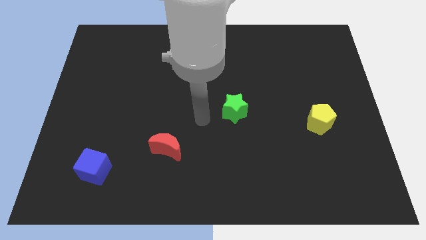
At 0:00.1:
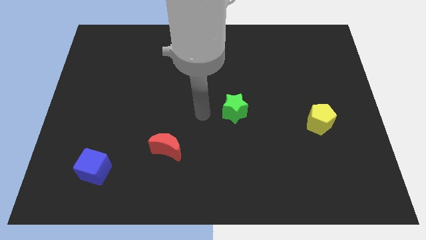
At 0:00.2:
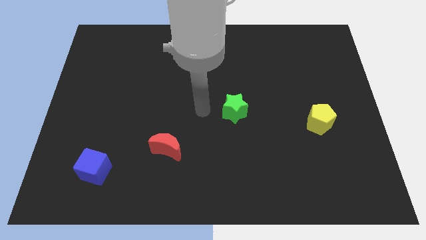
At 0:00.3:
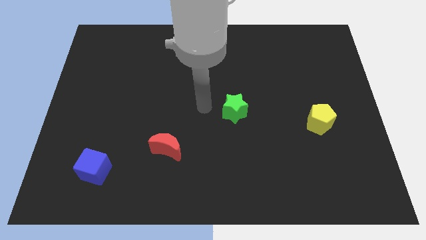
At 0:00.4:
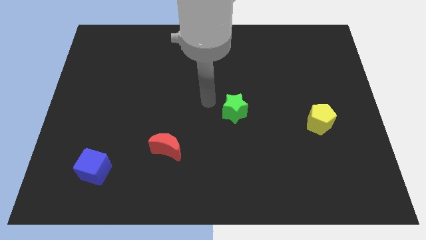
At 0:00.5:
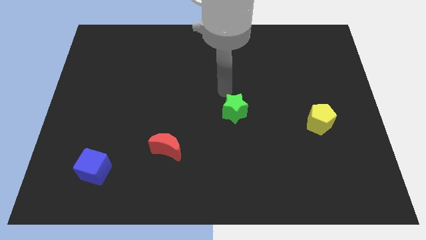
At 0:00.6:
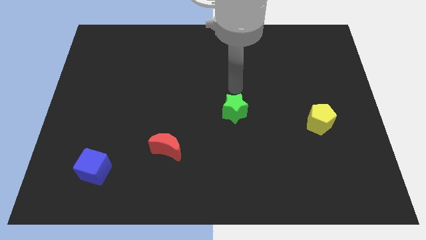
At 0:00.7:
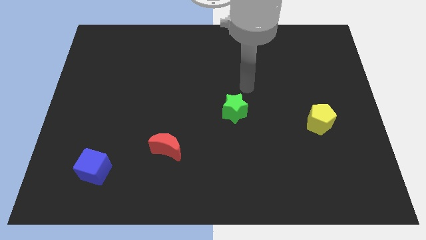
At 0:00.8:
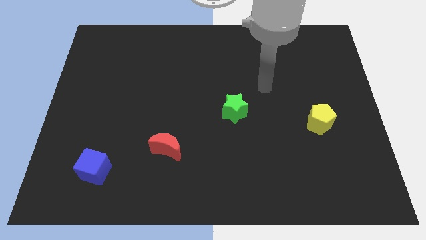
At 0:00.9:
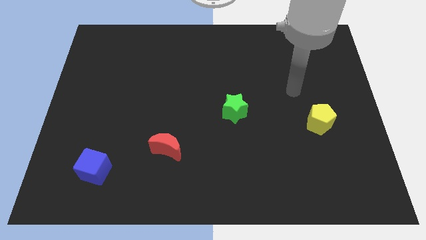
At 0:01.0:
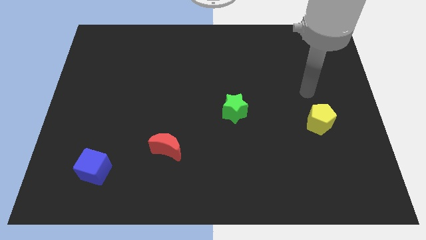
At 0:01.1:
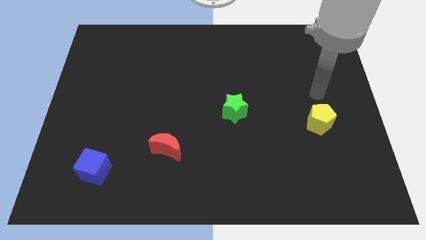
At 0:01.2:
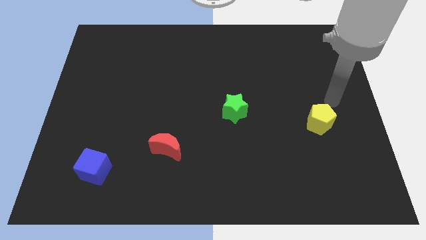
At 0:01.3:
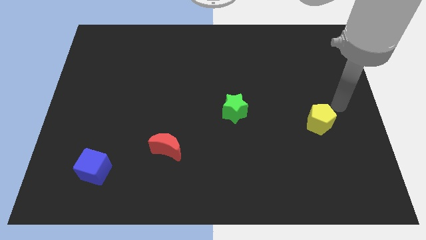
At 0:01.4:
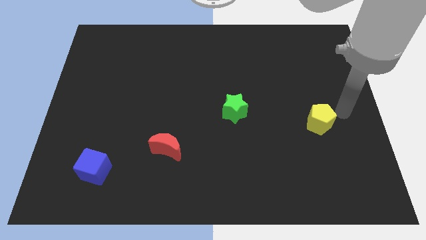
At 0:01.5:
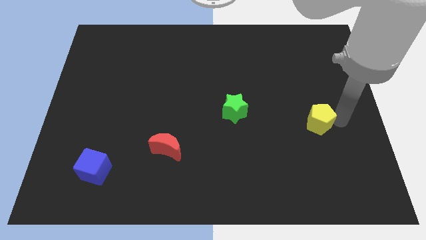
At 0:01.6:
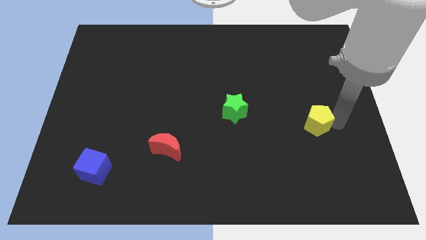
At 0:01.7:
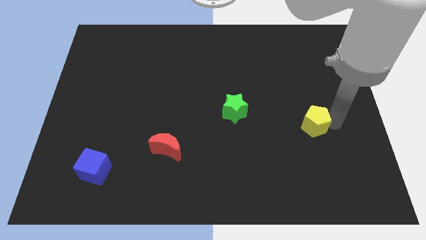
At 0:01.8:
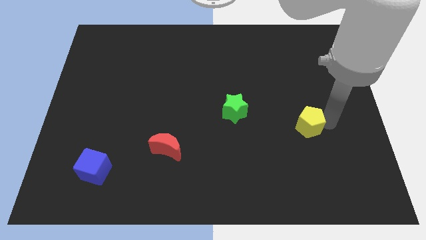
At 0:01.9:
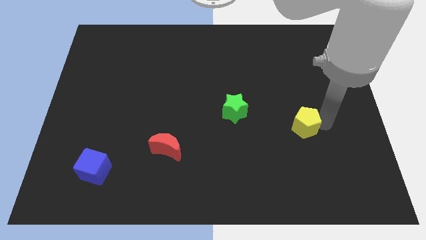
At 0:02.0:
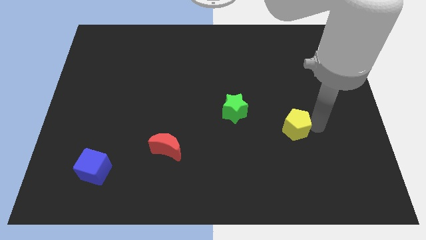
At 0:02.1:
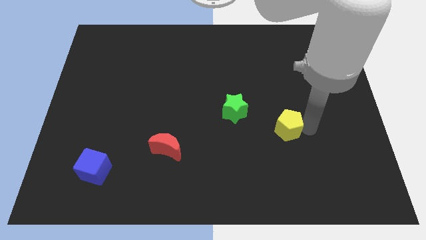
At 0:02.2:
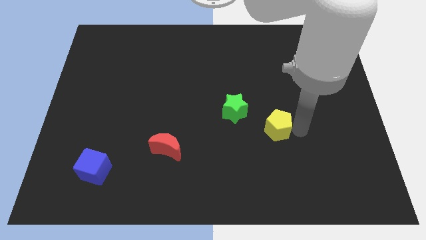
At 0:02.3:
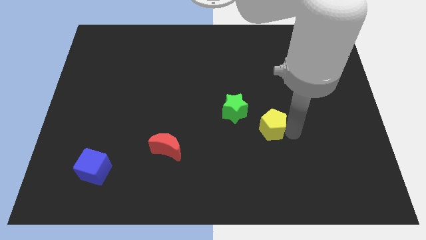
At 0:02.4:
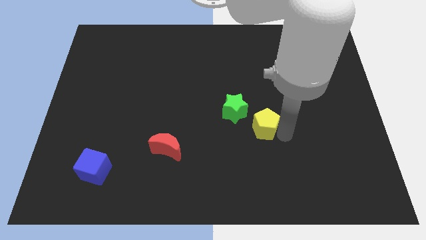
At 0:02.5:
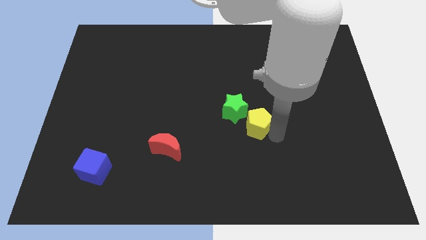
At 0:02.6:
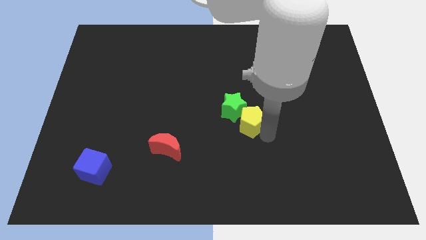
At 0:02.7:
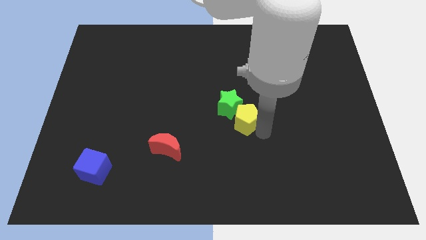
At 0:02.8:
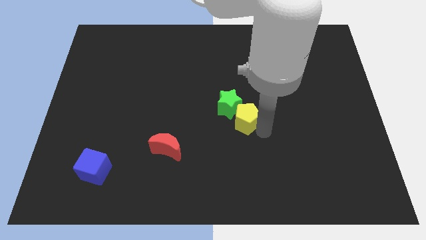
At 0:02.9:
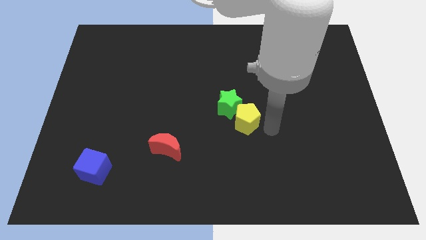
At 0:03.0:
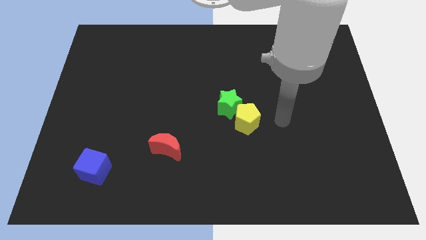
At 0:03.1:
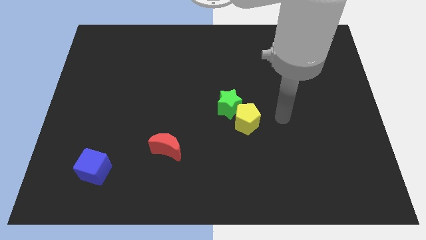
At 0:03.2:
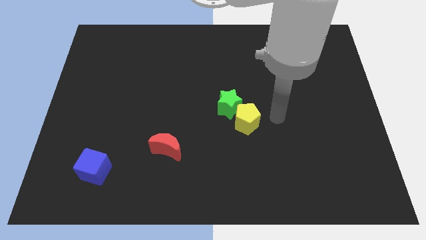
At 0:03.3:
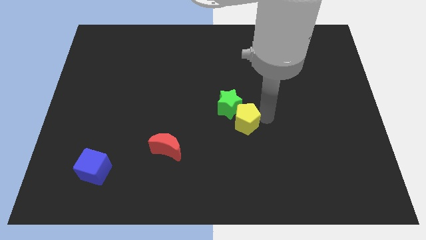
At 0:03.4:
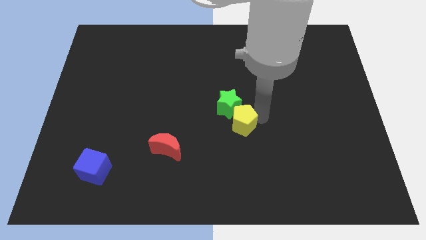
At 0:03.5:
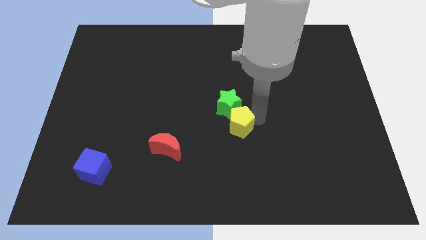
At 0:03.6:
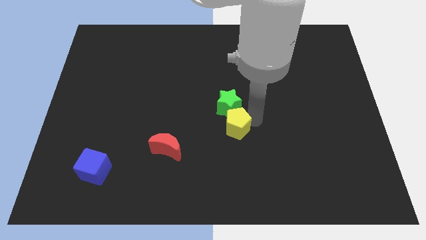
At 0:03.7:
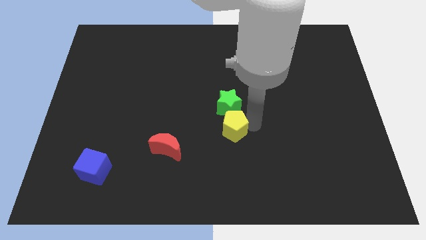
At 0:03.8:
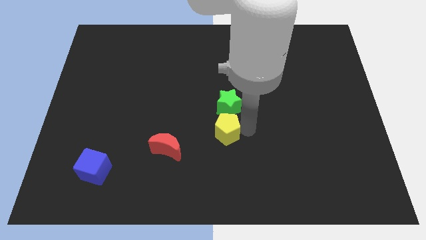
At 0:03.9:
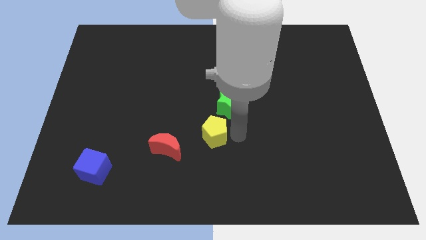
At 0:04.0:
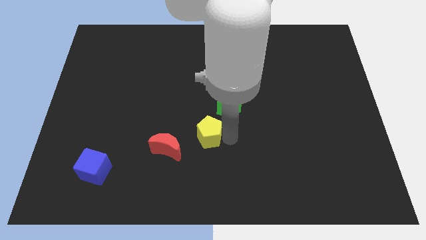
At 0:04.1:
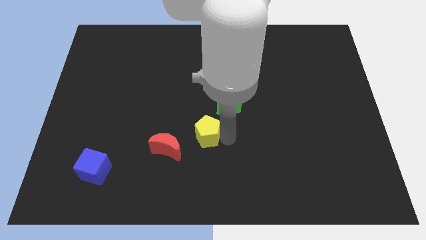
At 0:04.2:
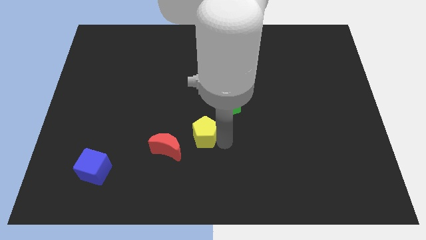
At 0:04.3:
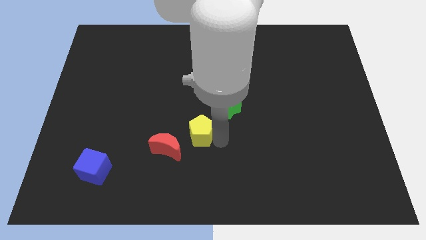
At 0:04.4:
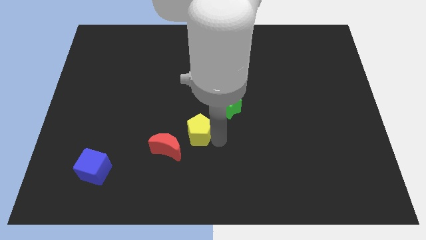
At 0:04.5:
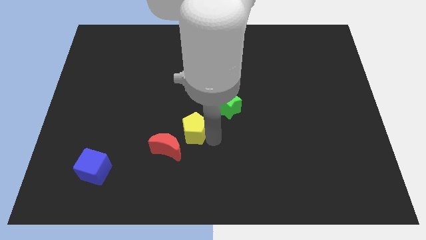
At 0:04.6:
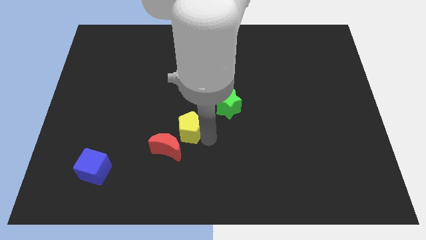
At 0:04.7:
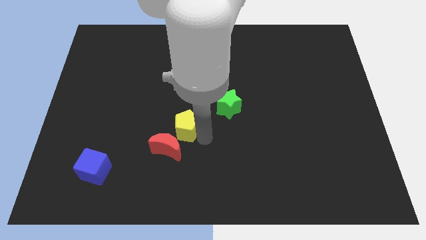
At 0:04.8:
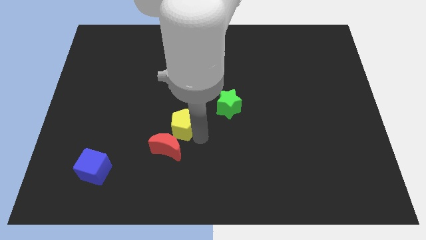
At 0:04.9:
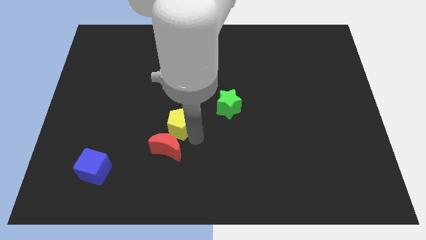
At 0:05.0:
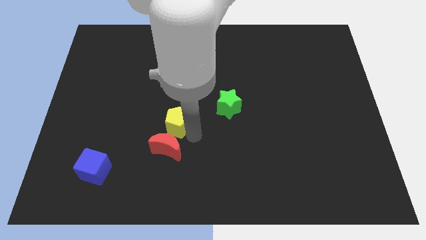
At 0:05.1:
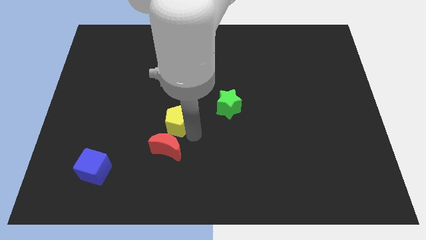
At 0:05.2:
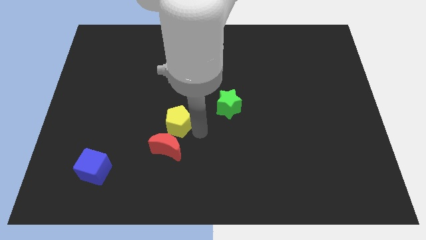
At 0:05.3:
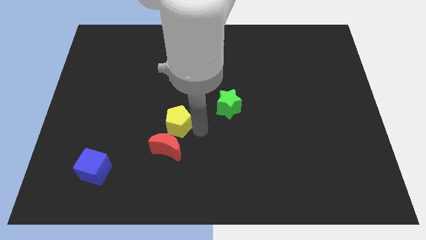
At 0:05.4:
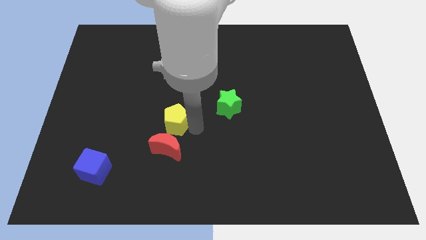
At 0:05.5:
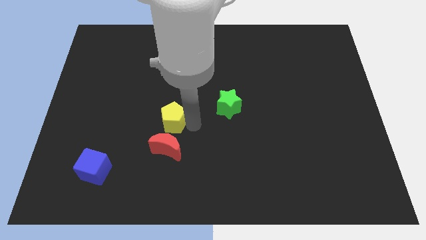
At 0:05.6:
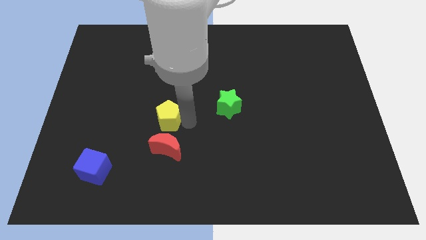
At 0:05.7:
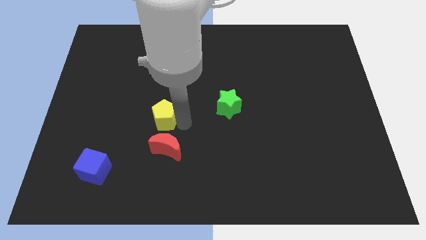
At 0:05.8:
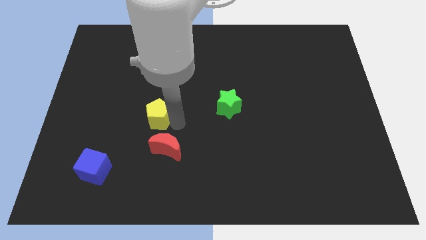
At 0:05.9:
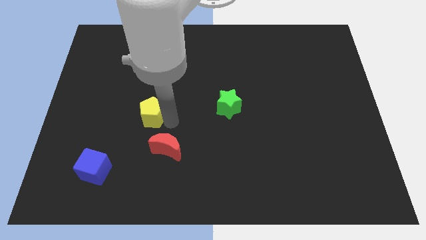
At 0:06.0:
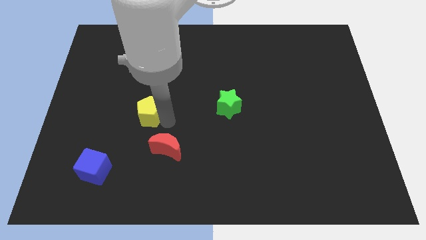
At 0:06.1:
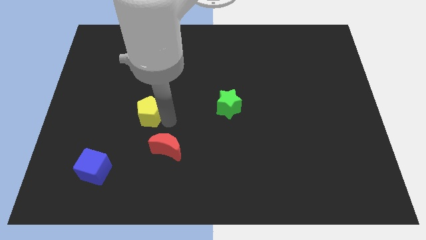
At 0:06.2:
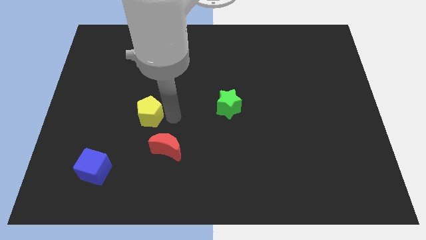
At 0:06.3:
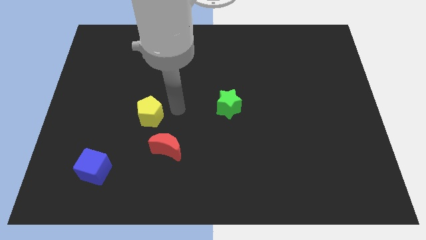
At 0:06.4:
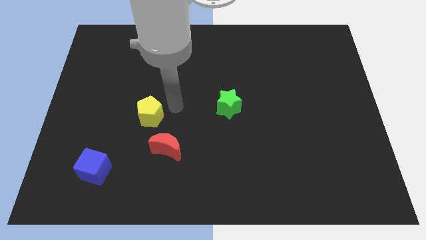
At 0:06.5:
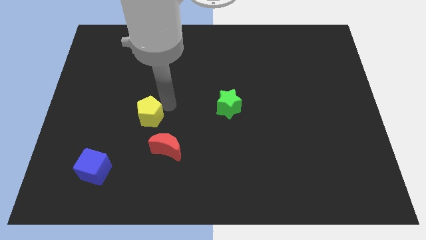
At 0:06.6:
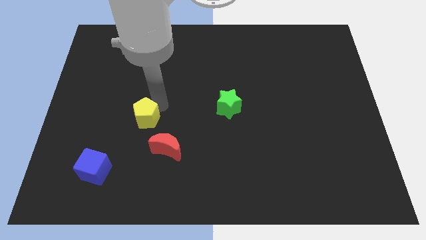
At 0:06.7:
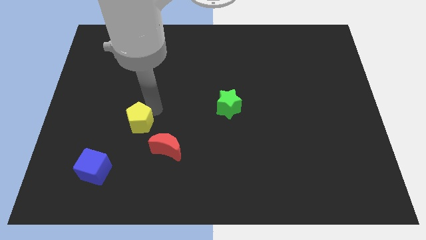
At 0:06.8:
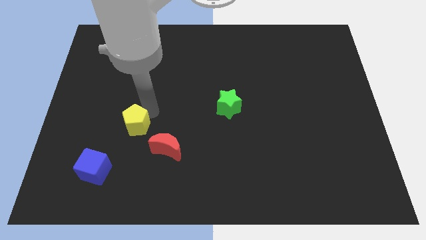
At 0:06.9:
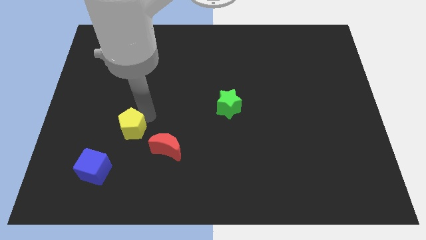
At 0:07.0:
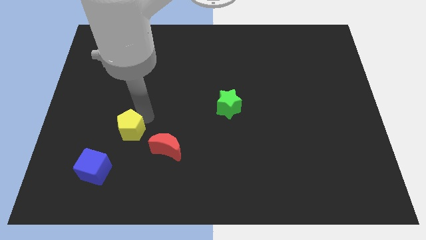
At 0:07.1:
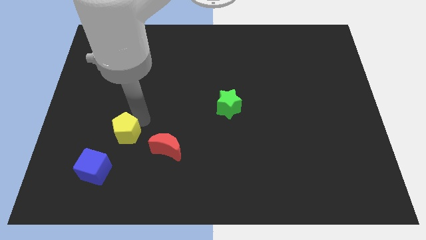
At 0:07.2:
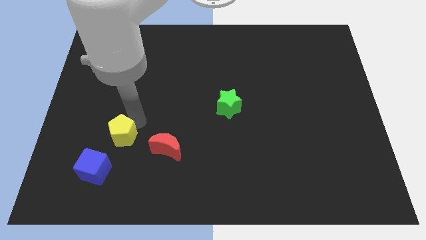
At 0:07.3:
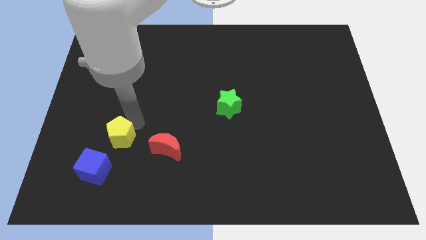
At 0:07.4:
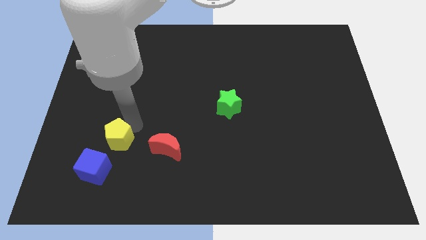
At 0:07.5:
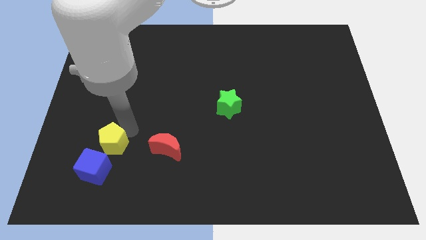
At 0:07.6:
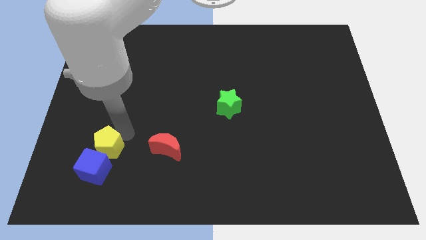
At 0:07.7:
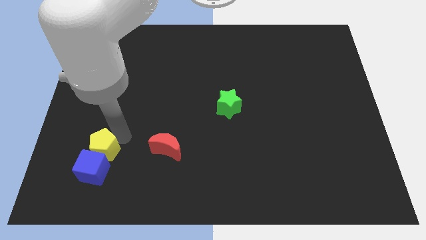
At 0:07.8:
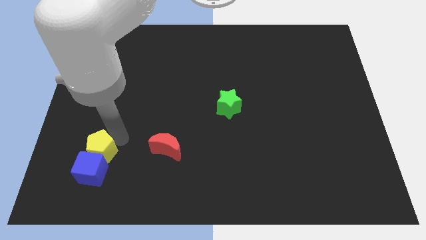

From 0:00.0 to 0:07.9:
put the yellow block next to the blue cube

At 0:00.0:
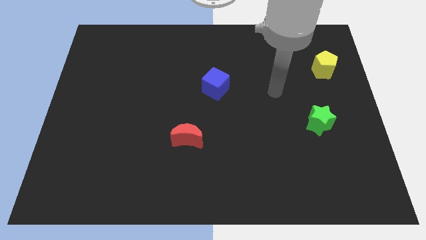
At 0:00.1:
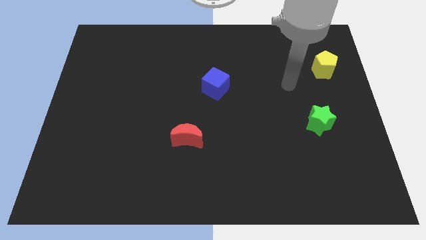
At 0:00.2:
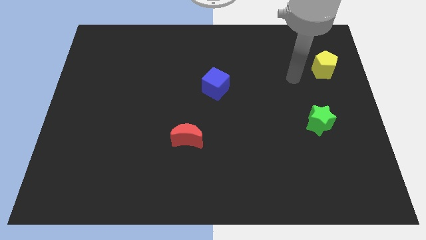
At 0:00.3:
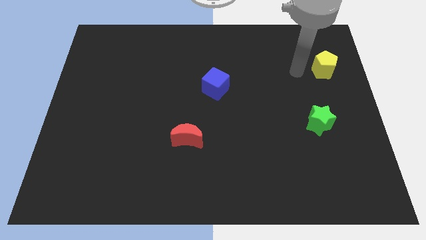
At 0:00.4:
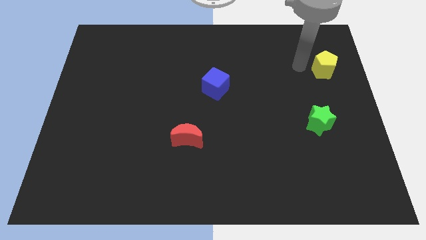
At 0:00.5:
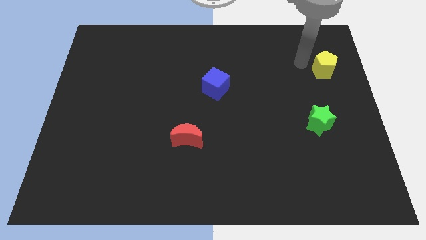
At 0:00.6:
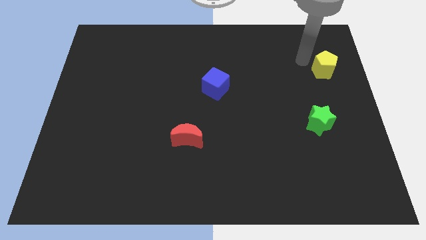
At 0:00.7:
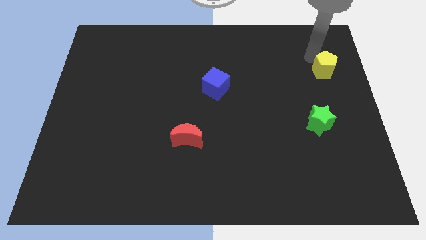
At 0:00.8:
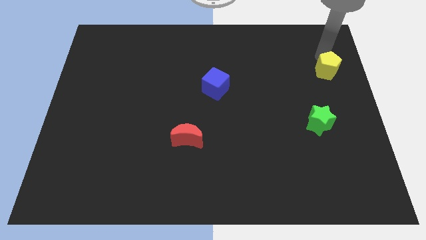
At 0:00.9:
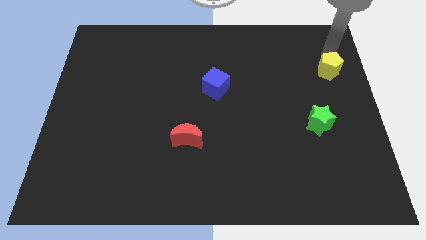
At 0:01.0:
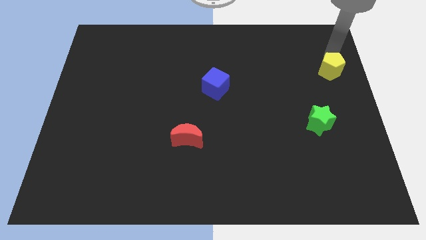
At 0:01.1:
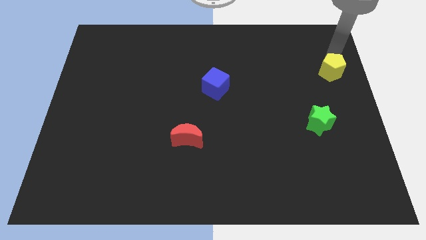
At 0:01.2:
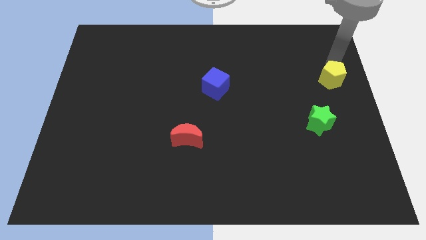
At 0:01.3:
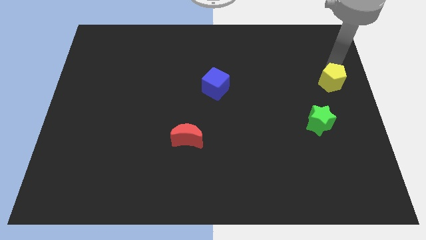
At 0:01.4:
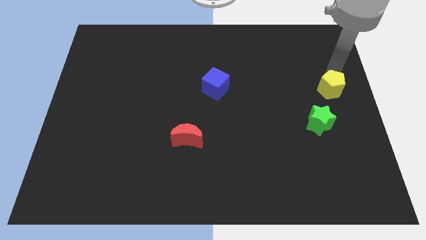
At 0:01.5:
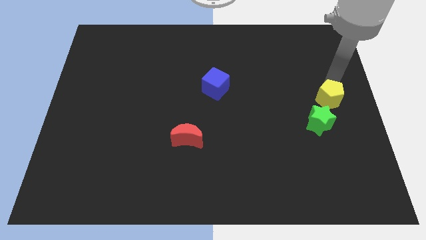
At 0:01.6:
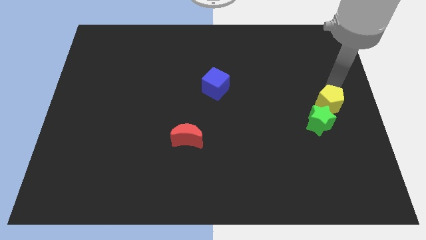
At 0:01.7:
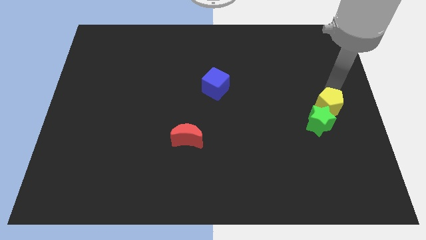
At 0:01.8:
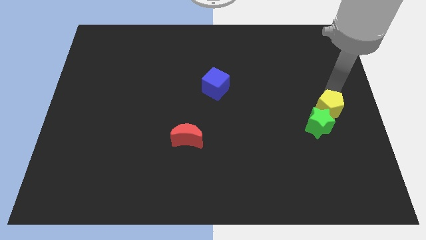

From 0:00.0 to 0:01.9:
push the yellow block next to the green block
